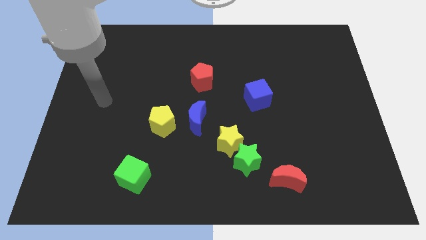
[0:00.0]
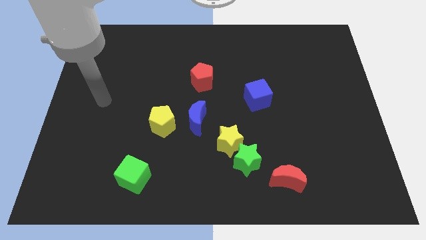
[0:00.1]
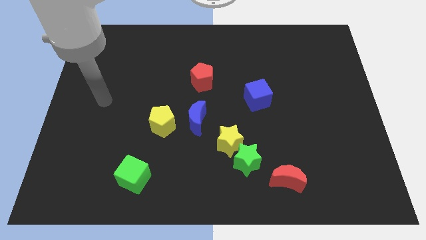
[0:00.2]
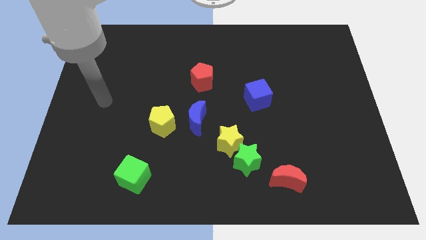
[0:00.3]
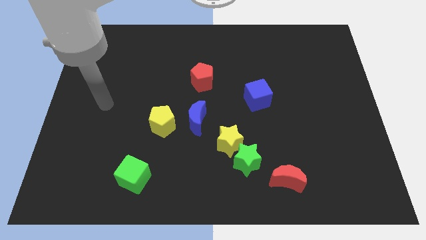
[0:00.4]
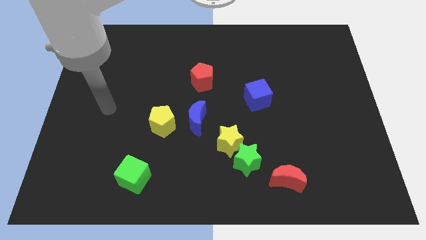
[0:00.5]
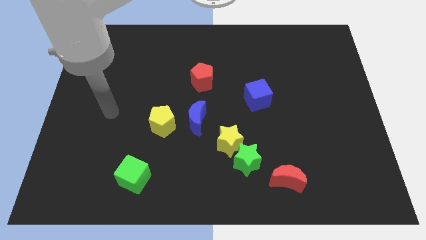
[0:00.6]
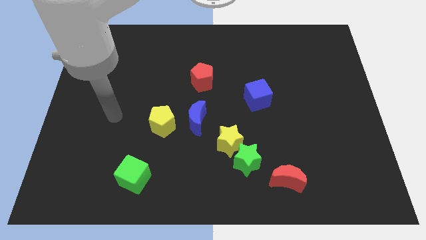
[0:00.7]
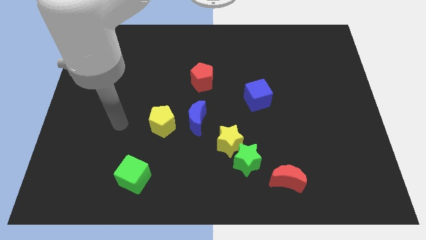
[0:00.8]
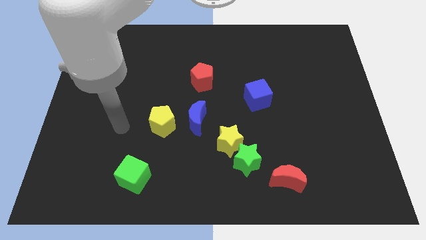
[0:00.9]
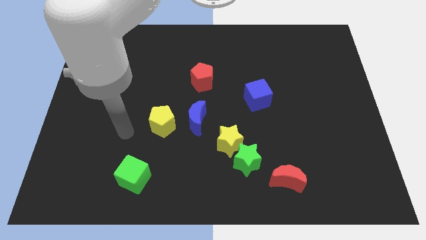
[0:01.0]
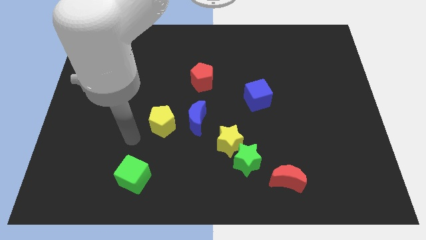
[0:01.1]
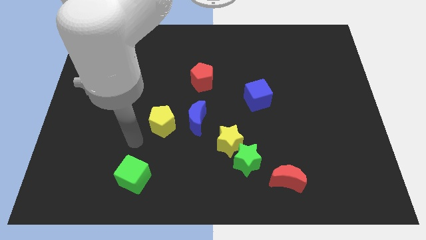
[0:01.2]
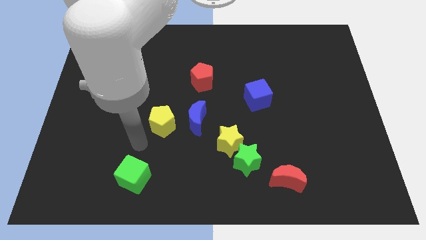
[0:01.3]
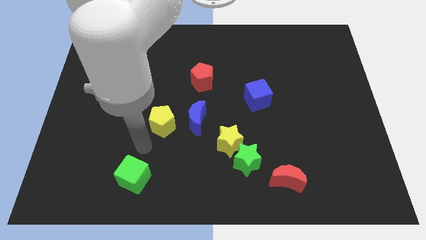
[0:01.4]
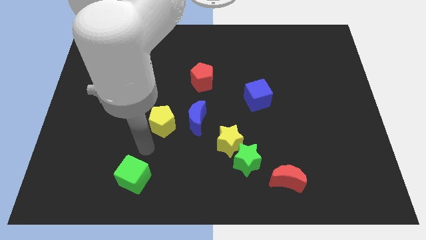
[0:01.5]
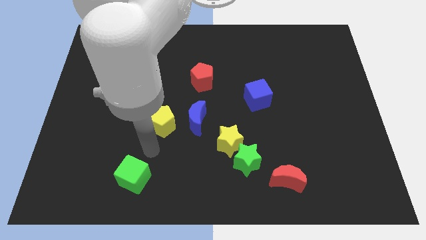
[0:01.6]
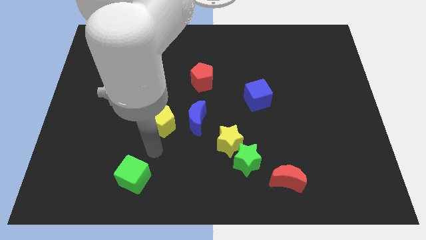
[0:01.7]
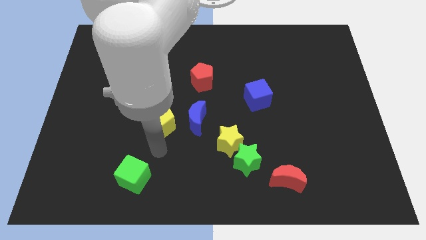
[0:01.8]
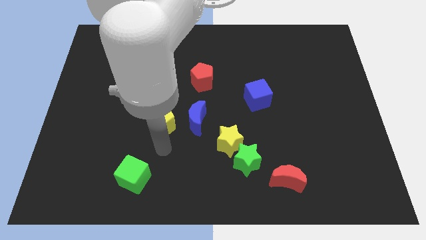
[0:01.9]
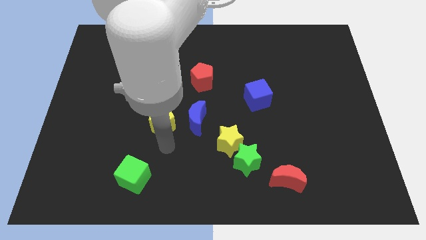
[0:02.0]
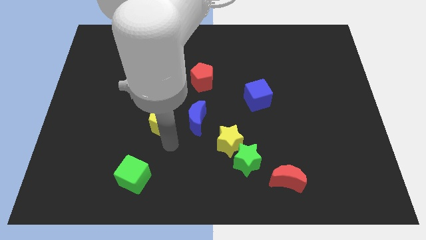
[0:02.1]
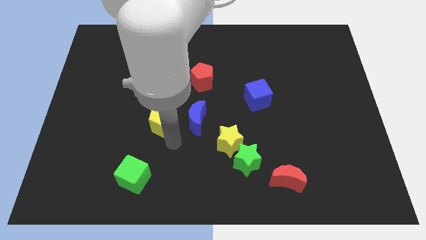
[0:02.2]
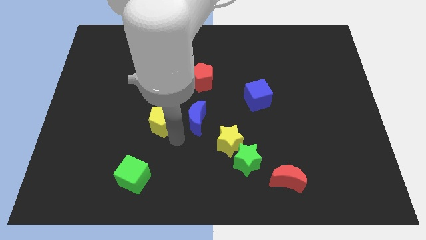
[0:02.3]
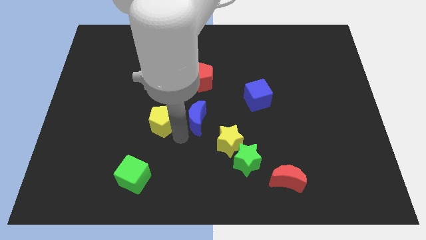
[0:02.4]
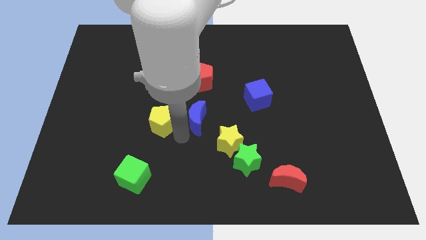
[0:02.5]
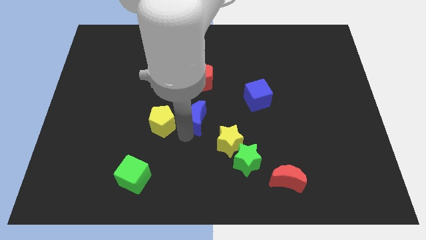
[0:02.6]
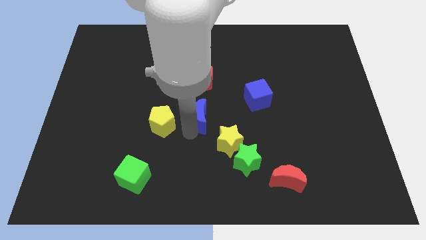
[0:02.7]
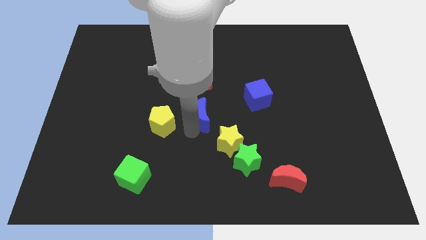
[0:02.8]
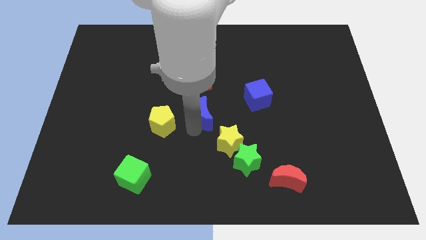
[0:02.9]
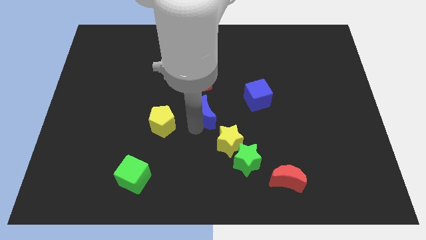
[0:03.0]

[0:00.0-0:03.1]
touch the blue crescent

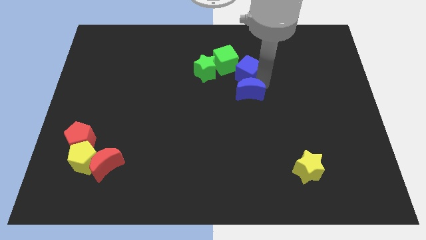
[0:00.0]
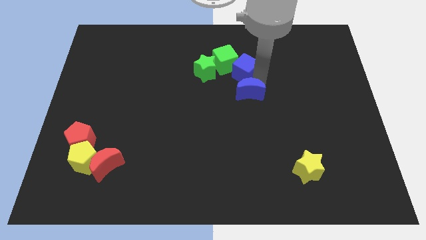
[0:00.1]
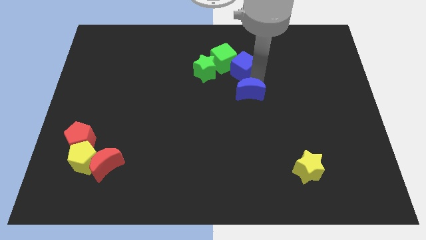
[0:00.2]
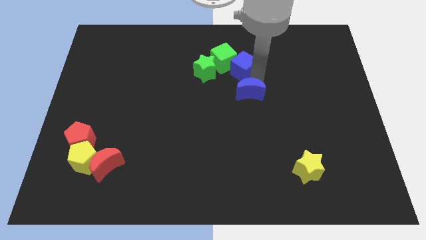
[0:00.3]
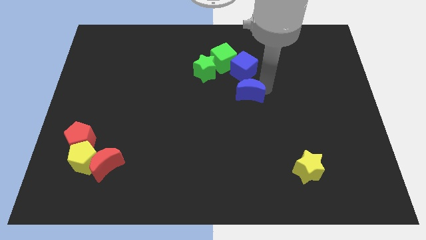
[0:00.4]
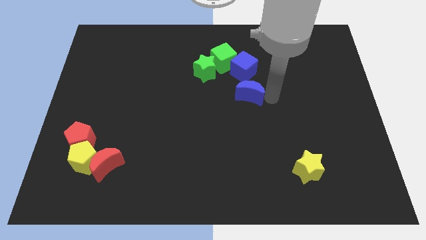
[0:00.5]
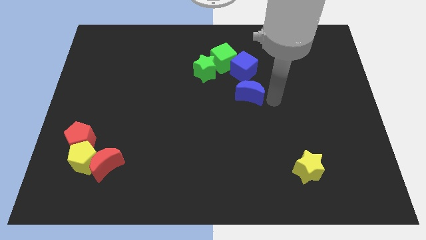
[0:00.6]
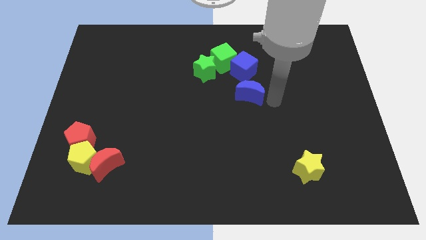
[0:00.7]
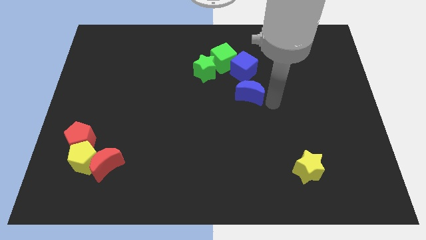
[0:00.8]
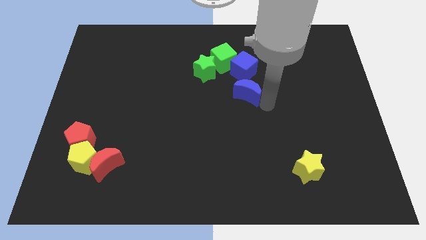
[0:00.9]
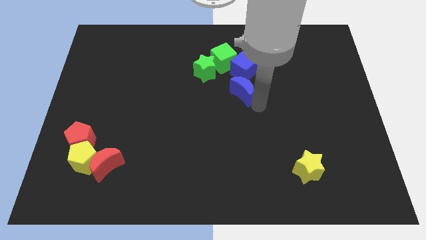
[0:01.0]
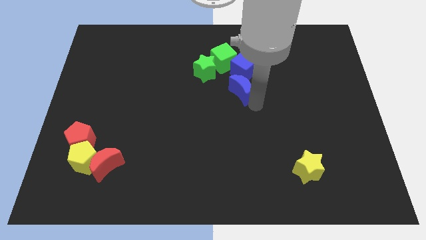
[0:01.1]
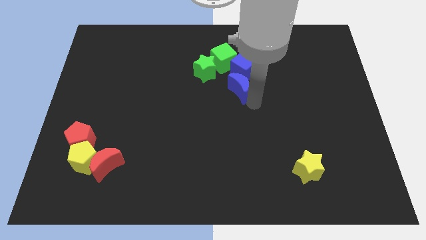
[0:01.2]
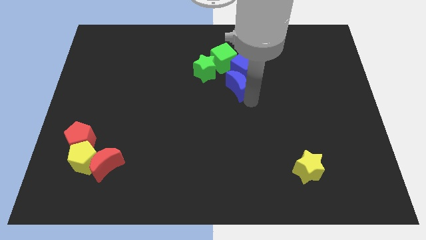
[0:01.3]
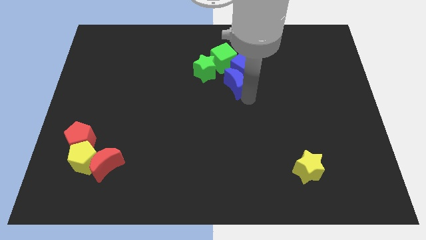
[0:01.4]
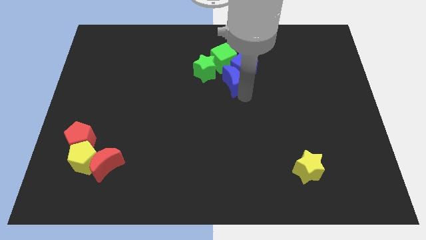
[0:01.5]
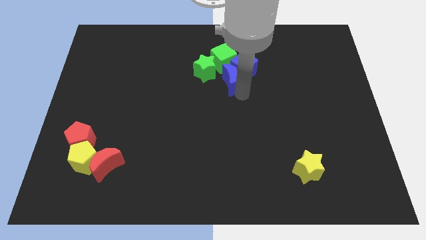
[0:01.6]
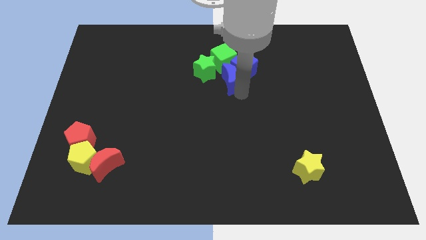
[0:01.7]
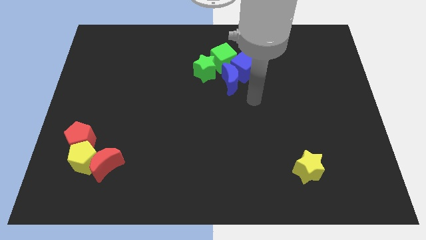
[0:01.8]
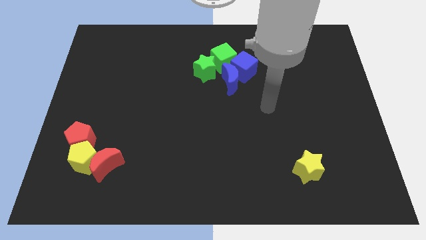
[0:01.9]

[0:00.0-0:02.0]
push blue moon below green cube

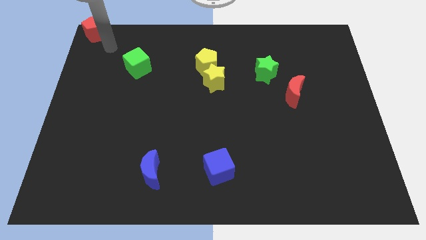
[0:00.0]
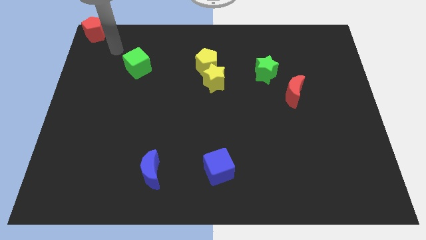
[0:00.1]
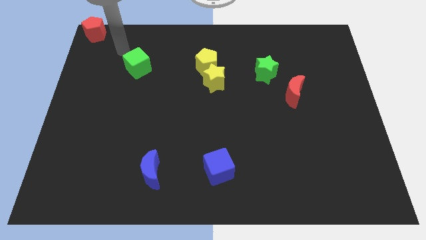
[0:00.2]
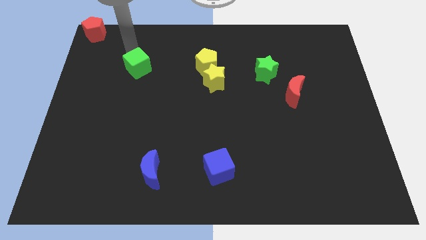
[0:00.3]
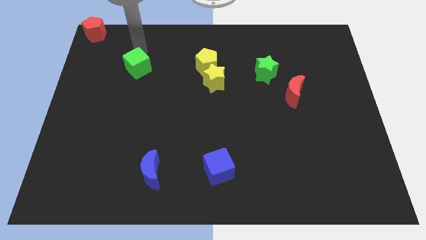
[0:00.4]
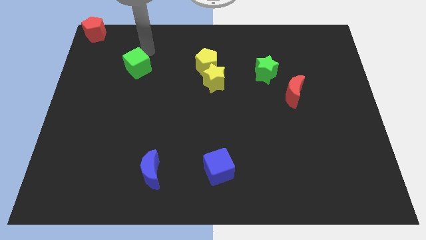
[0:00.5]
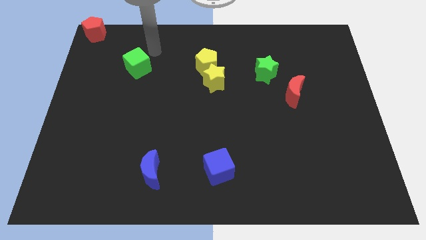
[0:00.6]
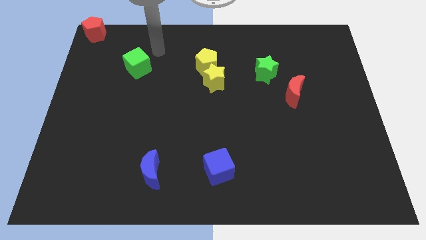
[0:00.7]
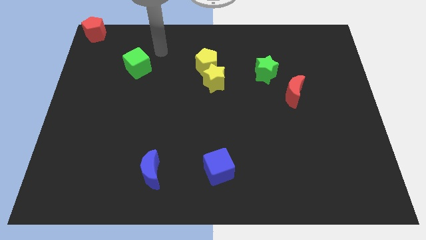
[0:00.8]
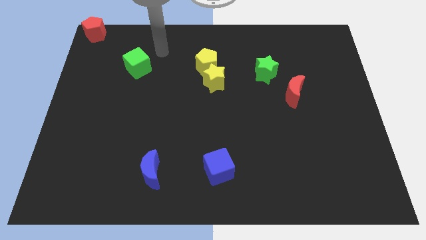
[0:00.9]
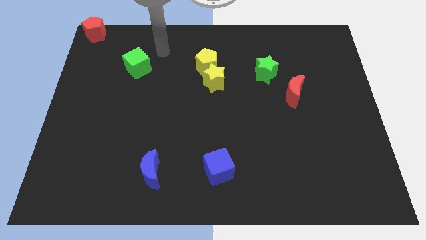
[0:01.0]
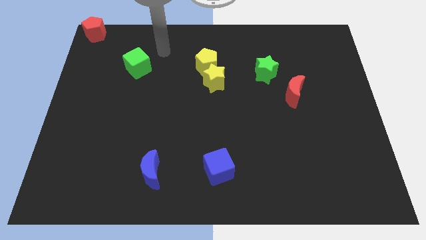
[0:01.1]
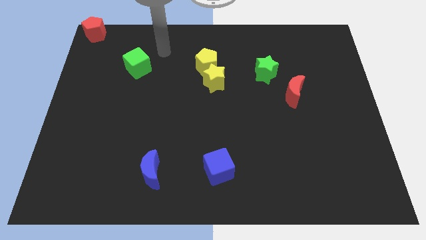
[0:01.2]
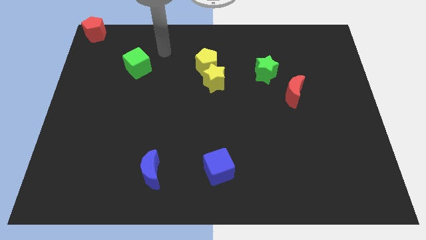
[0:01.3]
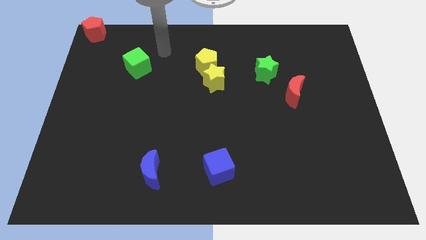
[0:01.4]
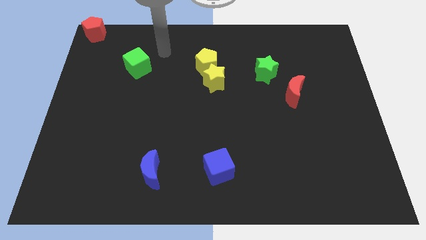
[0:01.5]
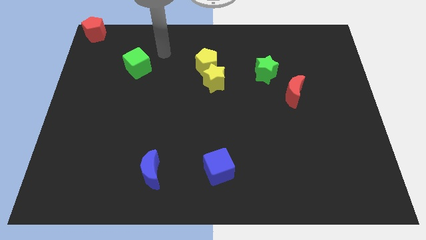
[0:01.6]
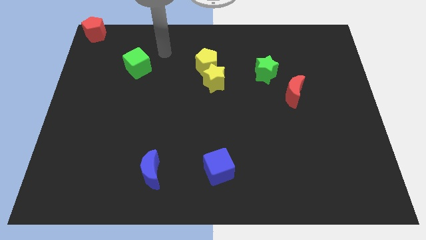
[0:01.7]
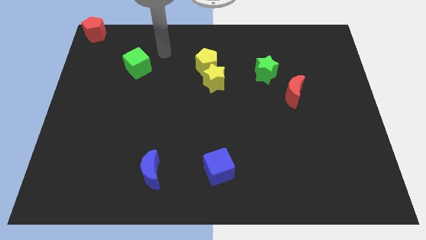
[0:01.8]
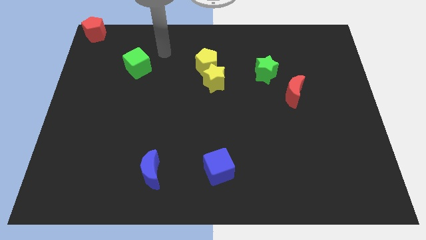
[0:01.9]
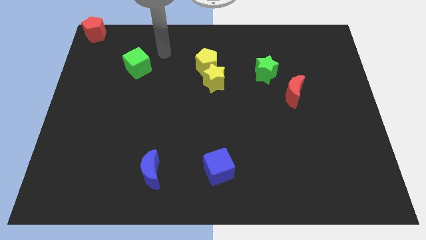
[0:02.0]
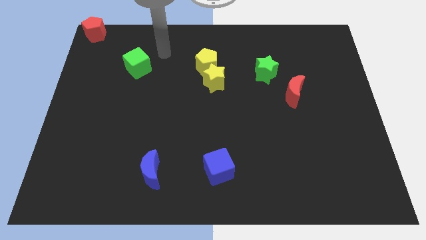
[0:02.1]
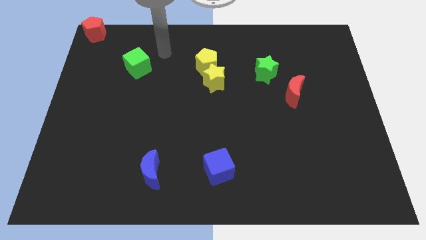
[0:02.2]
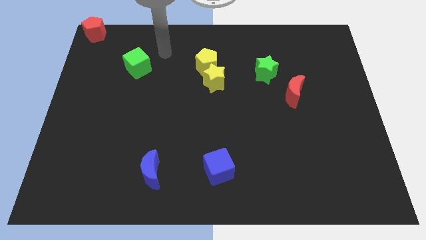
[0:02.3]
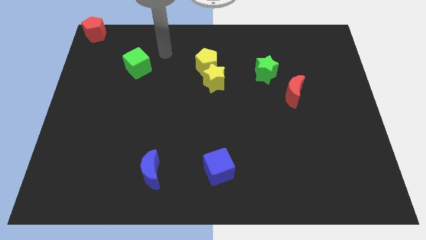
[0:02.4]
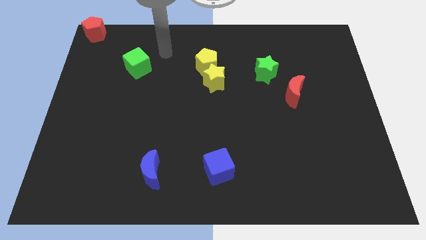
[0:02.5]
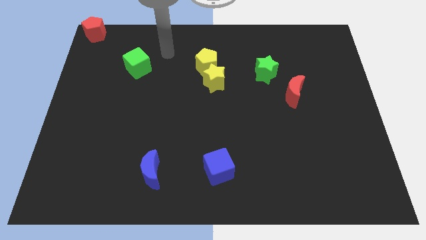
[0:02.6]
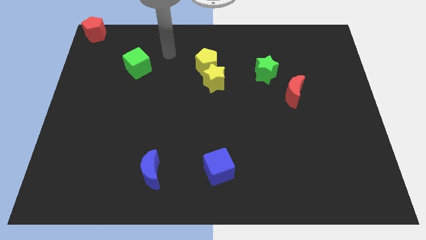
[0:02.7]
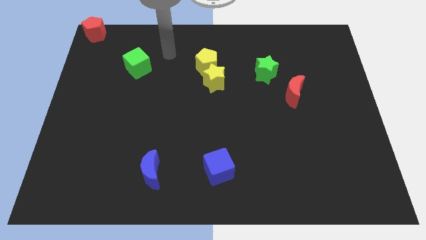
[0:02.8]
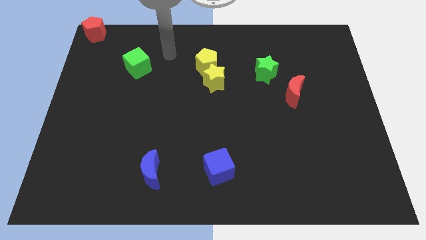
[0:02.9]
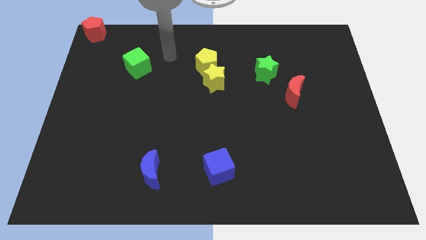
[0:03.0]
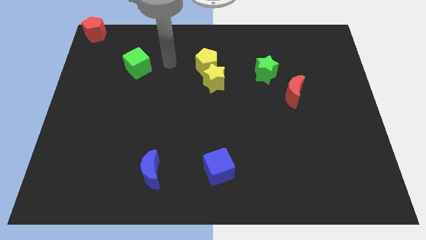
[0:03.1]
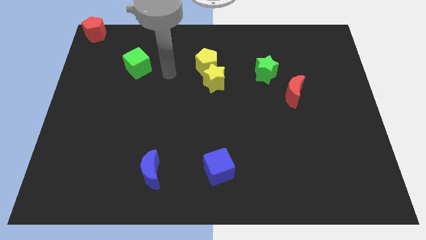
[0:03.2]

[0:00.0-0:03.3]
point your arm in between the green cube and the yellow pentagon

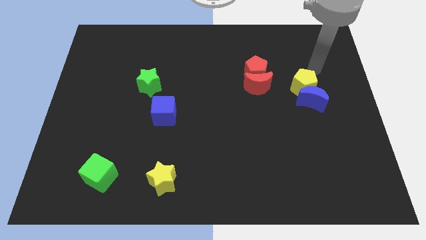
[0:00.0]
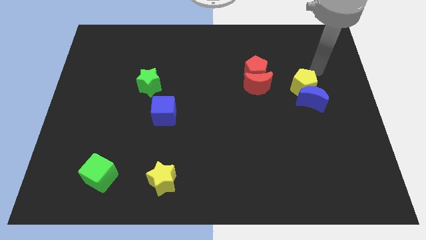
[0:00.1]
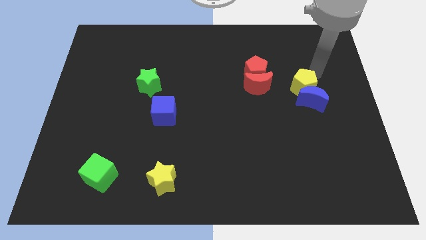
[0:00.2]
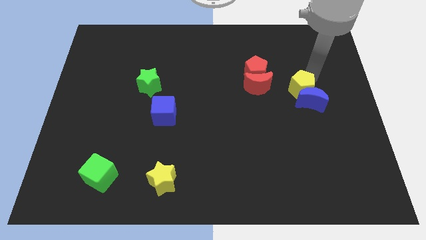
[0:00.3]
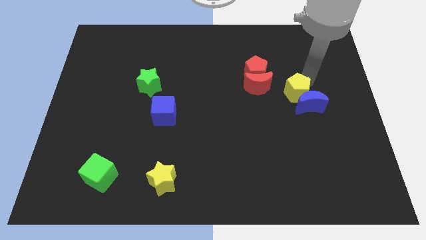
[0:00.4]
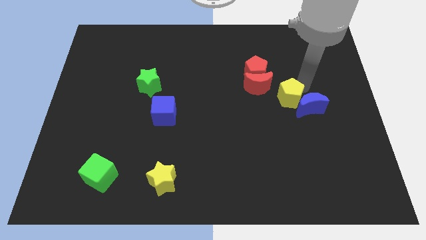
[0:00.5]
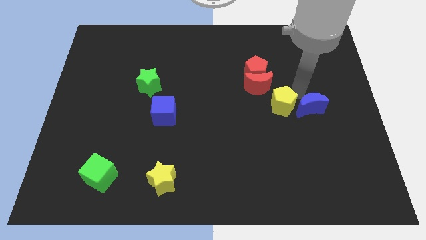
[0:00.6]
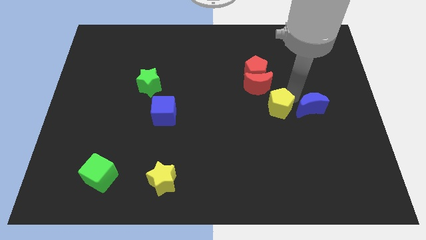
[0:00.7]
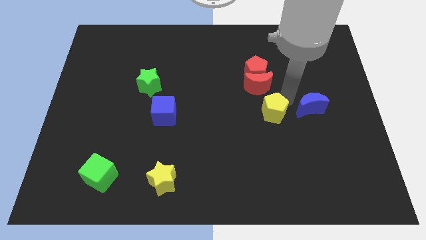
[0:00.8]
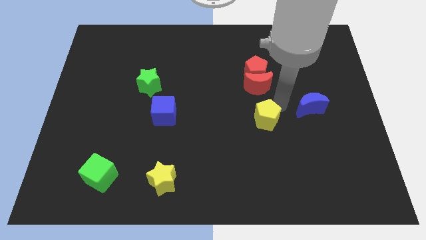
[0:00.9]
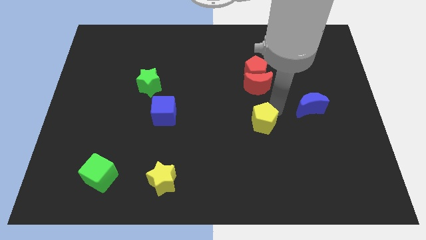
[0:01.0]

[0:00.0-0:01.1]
separate the yellow pentagon from the blue moon
